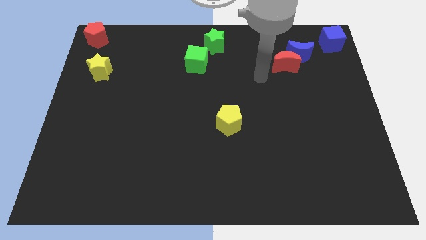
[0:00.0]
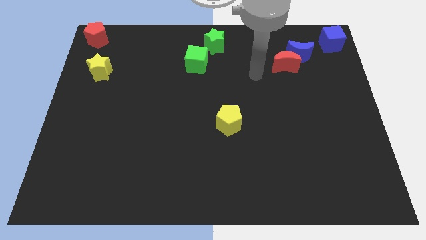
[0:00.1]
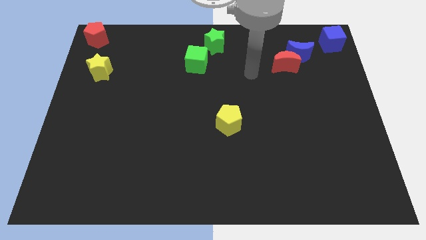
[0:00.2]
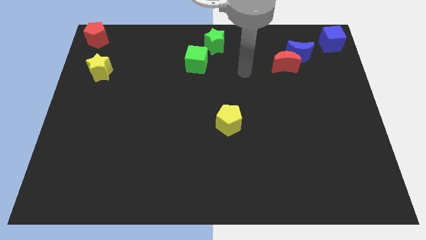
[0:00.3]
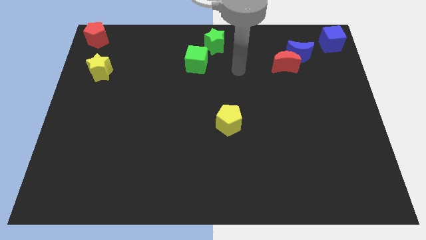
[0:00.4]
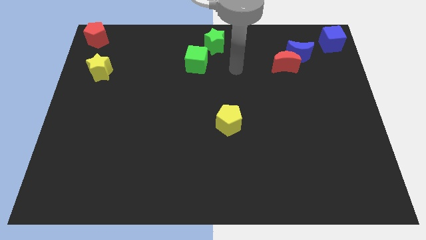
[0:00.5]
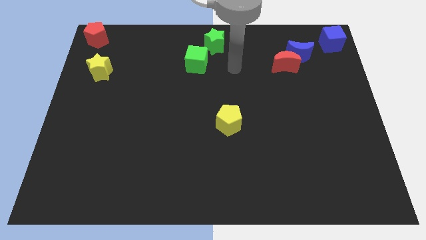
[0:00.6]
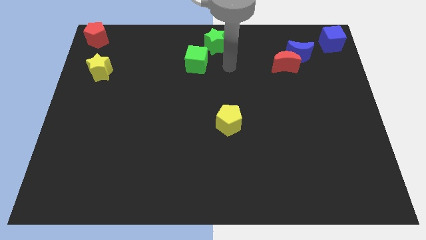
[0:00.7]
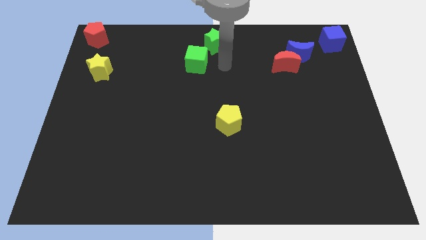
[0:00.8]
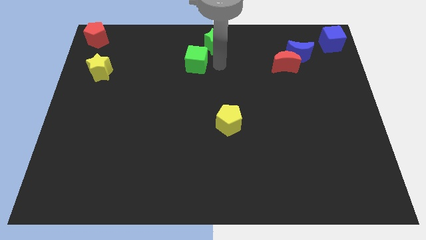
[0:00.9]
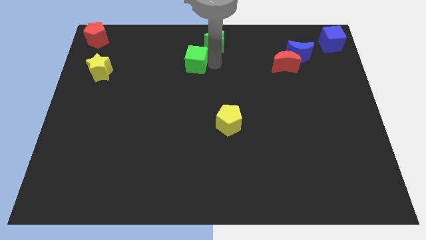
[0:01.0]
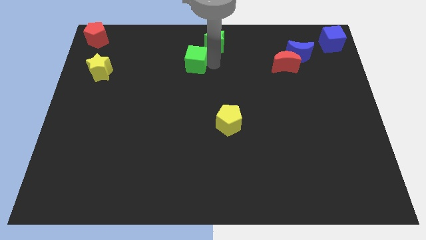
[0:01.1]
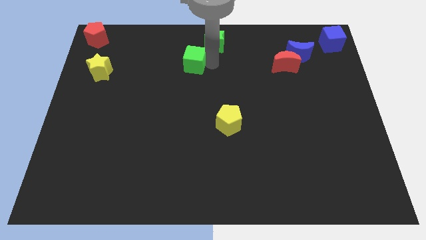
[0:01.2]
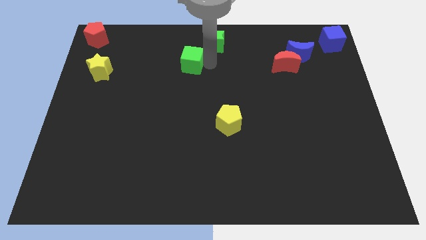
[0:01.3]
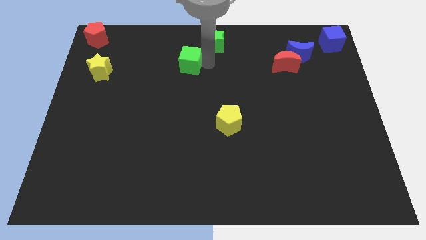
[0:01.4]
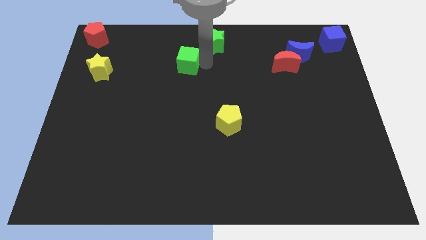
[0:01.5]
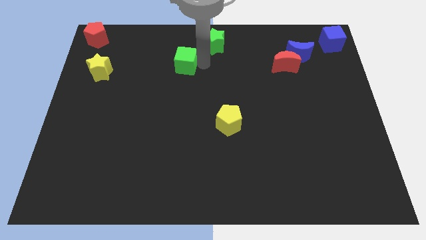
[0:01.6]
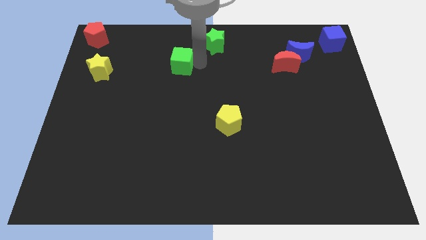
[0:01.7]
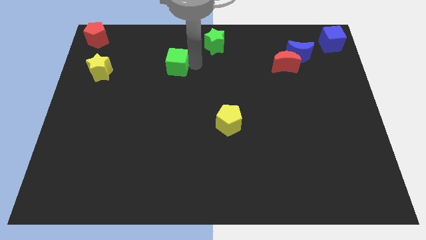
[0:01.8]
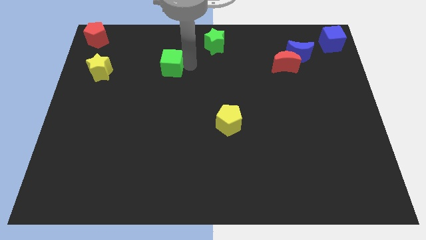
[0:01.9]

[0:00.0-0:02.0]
separate the green cube from green star

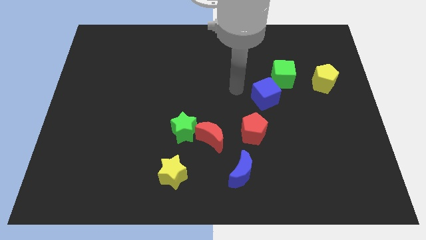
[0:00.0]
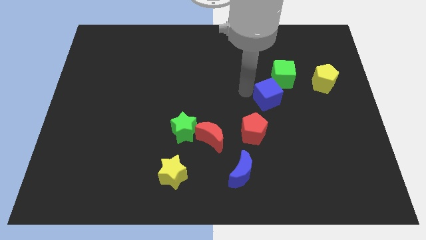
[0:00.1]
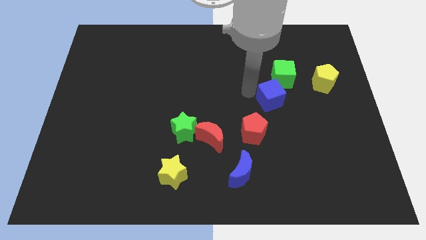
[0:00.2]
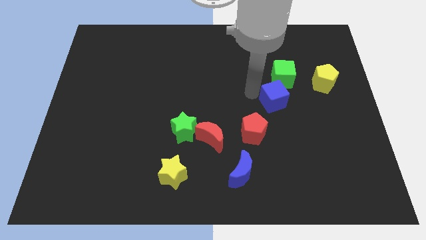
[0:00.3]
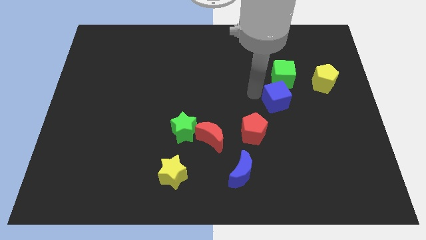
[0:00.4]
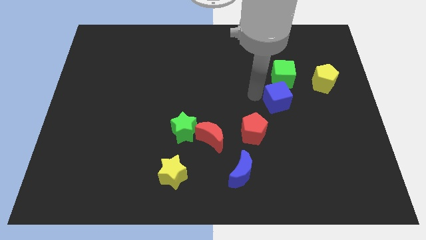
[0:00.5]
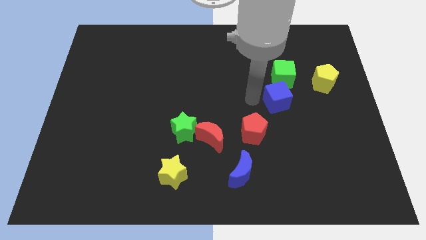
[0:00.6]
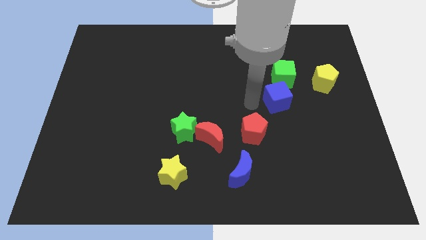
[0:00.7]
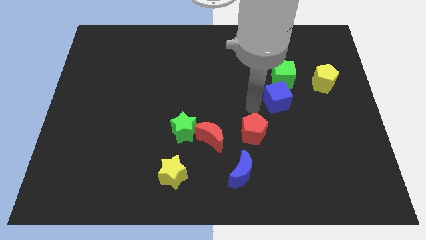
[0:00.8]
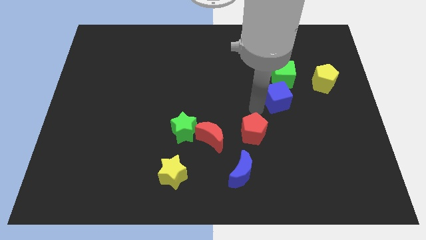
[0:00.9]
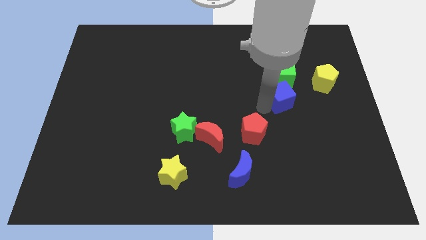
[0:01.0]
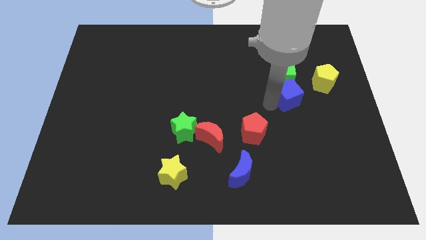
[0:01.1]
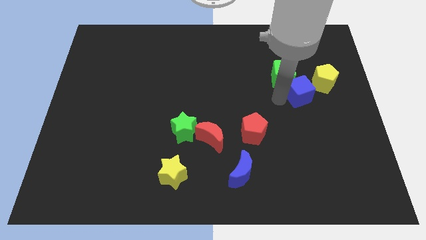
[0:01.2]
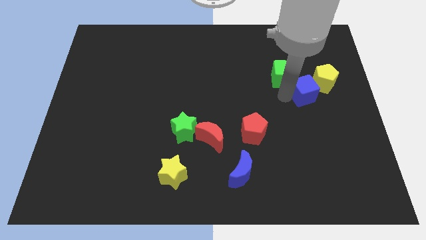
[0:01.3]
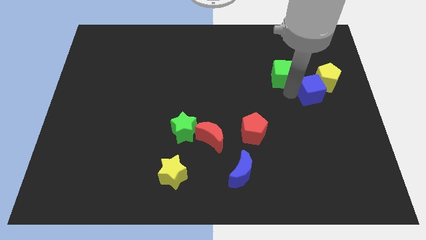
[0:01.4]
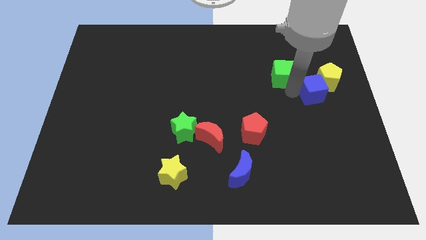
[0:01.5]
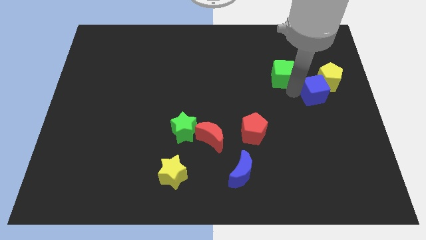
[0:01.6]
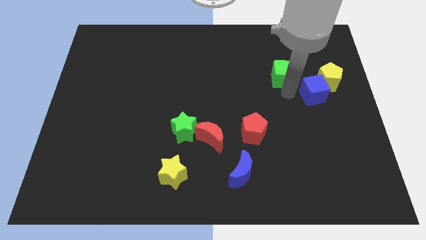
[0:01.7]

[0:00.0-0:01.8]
move the blue cube into the yellow pentagon

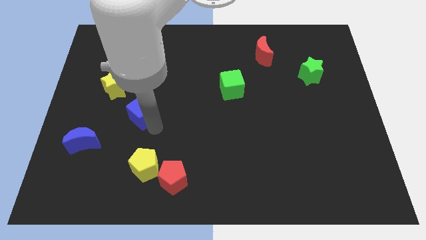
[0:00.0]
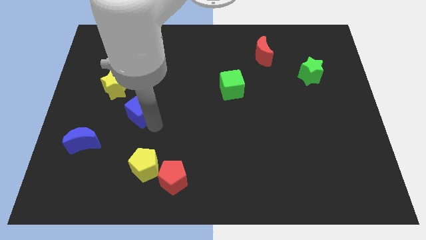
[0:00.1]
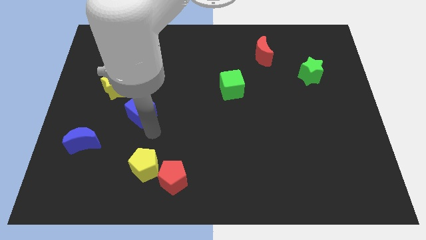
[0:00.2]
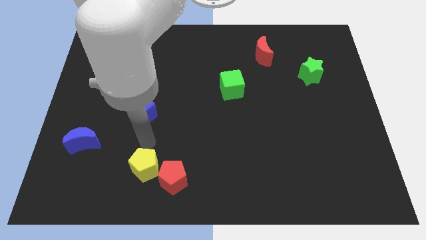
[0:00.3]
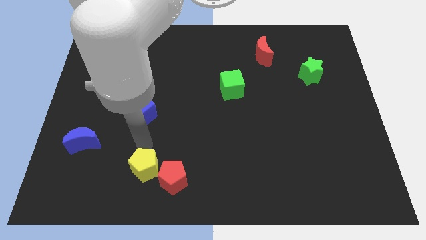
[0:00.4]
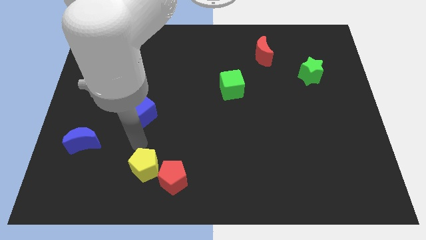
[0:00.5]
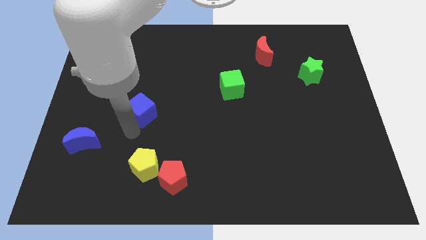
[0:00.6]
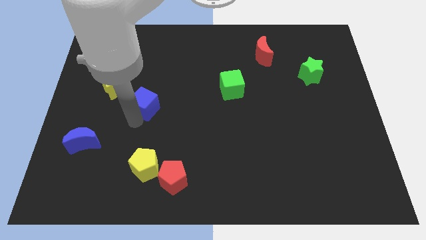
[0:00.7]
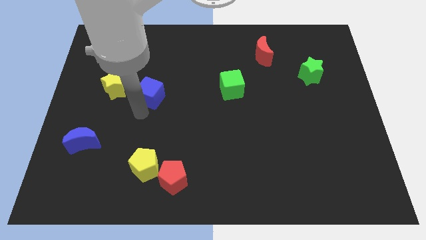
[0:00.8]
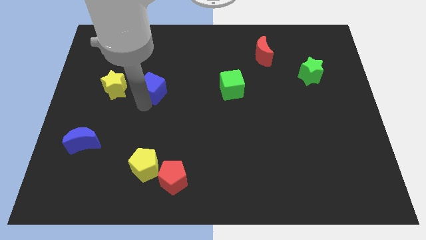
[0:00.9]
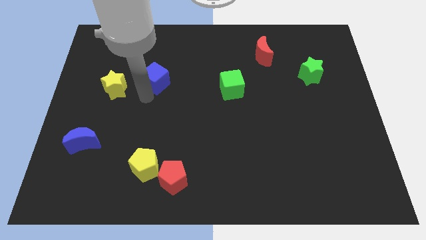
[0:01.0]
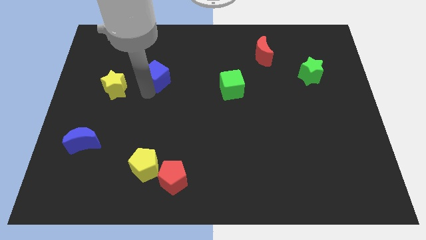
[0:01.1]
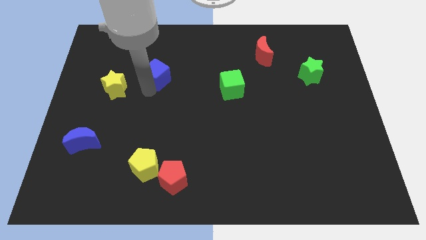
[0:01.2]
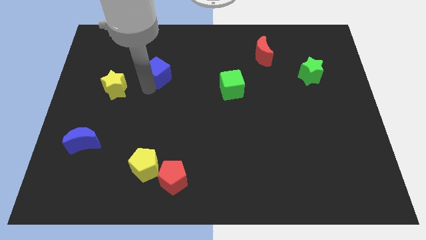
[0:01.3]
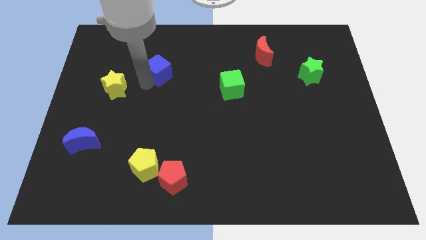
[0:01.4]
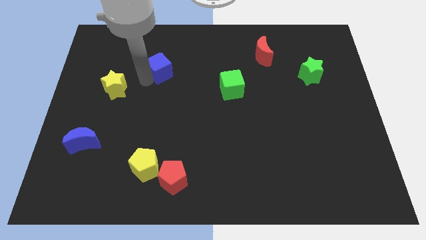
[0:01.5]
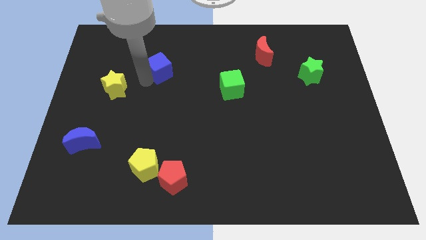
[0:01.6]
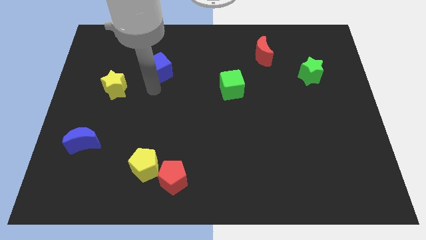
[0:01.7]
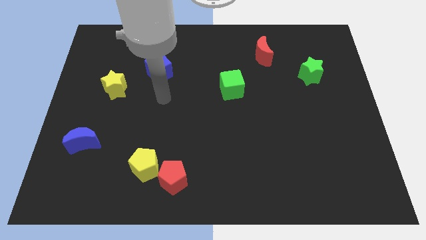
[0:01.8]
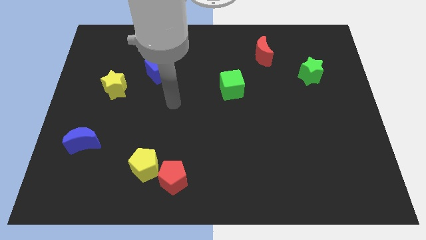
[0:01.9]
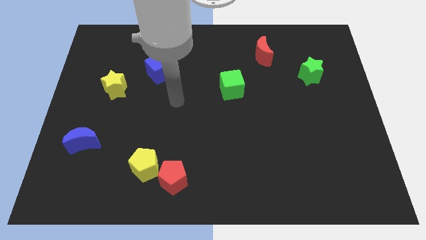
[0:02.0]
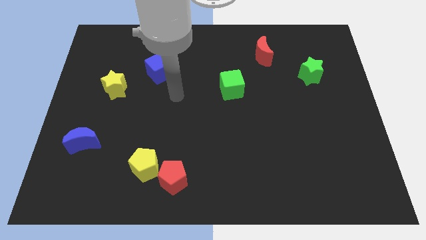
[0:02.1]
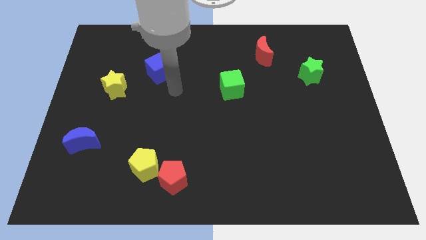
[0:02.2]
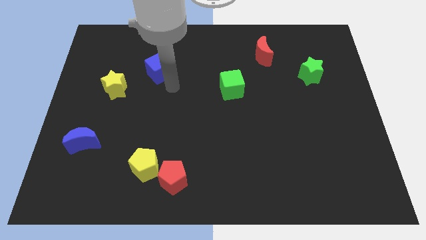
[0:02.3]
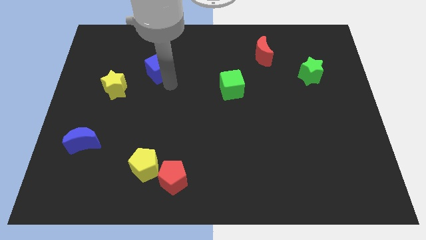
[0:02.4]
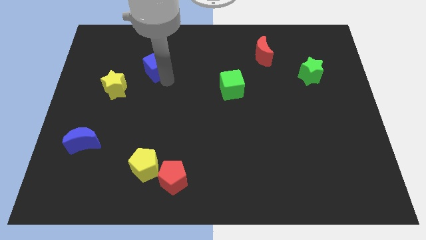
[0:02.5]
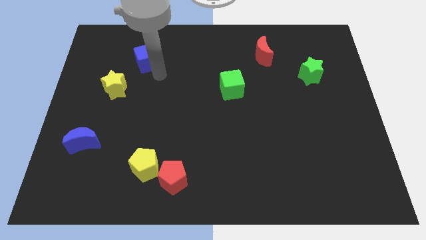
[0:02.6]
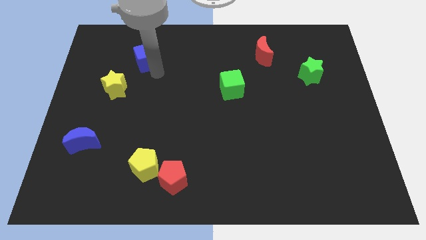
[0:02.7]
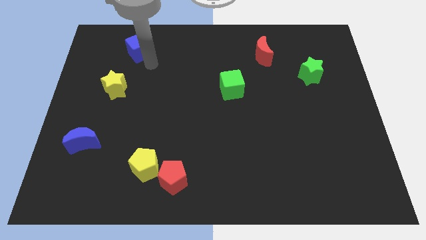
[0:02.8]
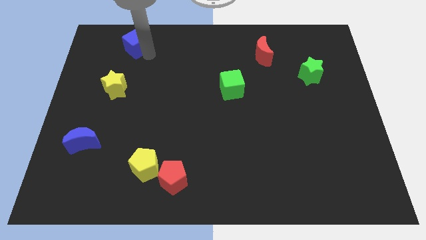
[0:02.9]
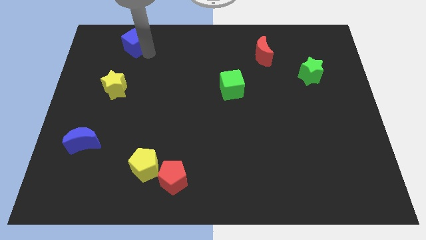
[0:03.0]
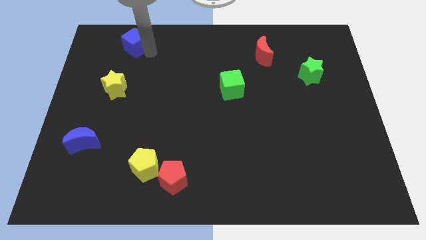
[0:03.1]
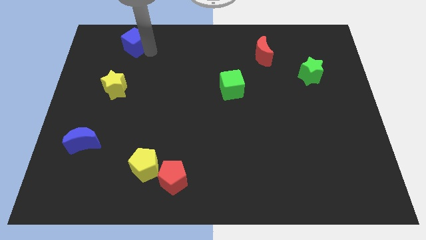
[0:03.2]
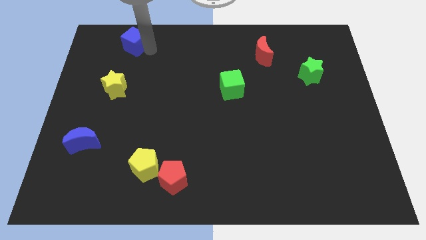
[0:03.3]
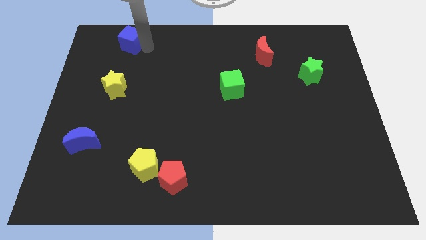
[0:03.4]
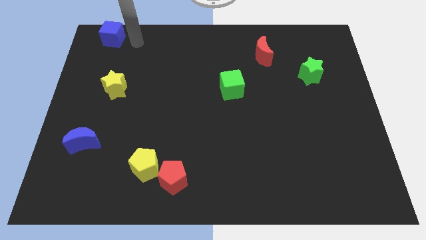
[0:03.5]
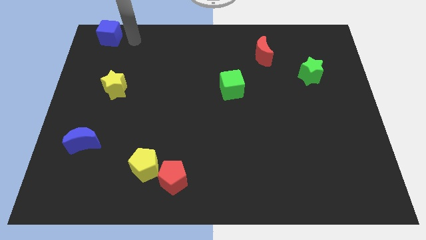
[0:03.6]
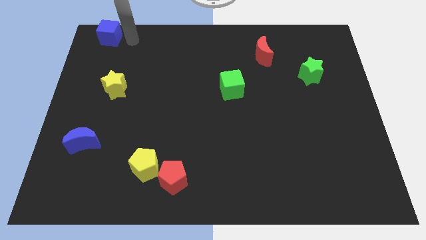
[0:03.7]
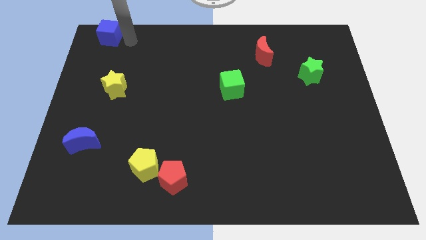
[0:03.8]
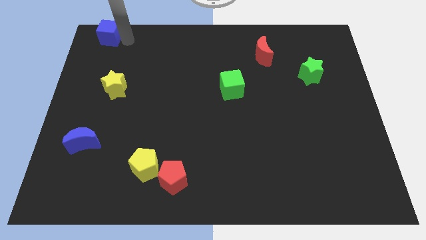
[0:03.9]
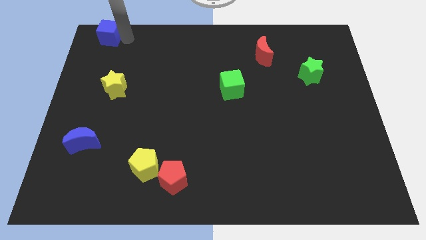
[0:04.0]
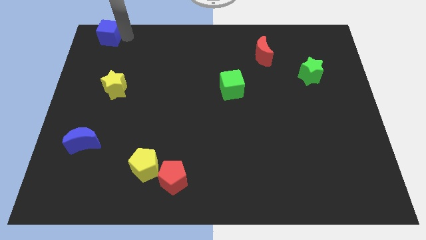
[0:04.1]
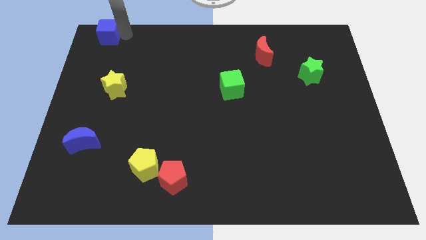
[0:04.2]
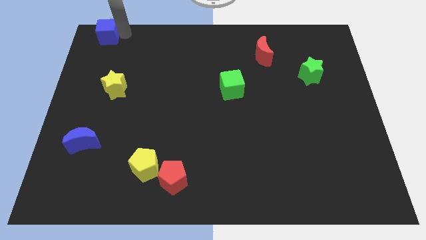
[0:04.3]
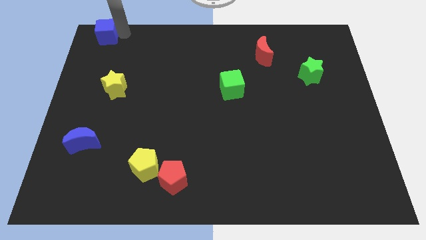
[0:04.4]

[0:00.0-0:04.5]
place the blue cube at the top of the yellow star

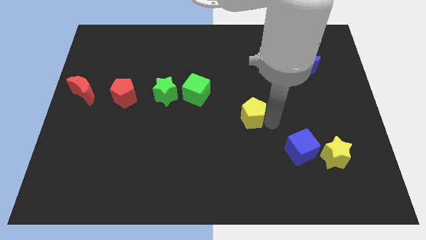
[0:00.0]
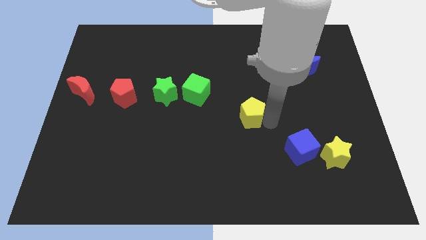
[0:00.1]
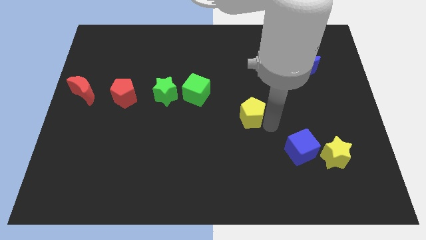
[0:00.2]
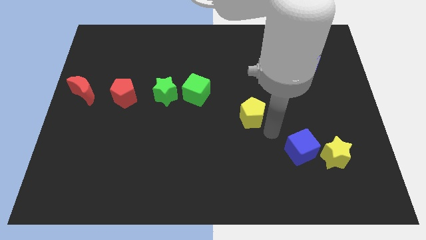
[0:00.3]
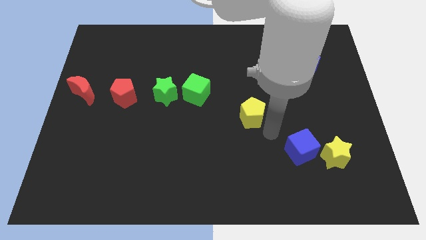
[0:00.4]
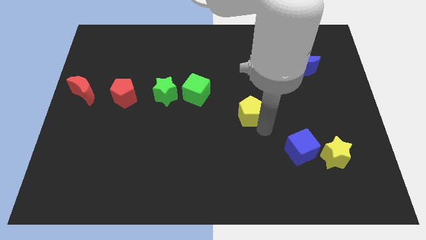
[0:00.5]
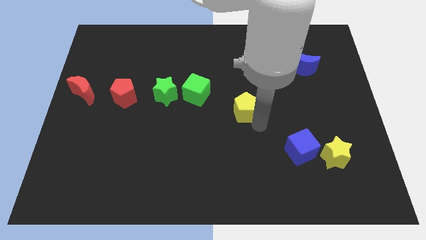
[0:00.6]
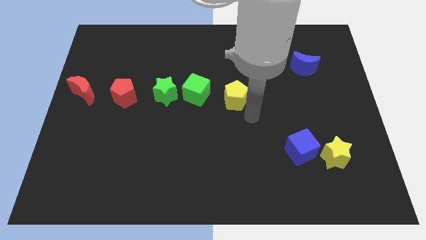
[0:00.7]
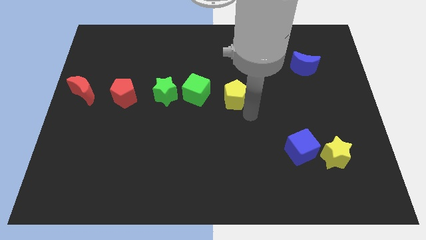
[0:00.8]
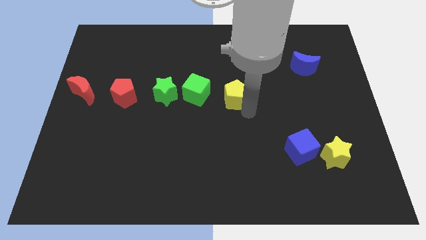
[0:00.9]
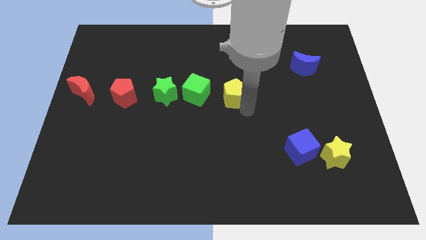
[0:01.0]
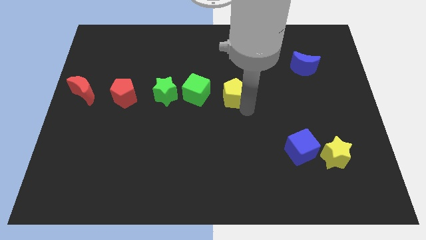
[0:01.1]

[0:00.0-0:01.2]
move the yellow pentagon to the right of green cube
